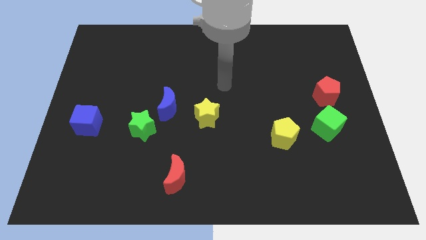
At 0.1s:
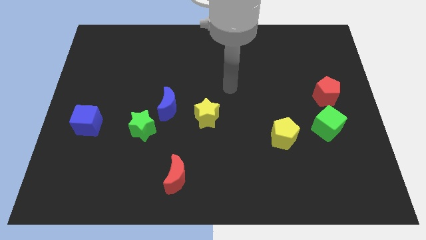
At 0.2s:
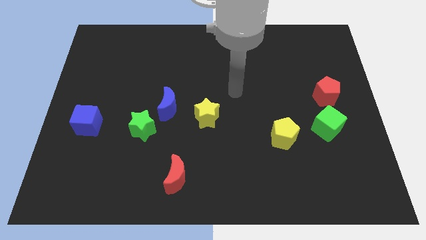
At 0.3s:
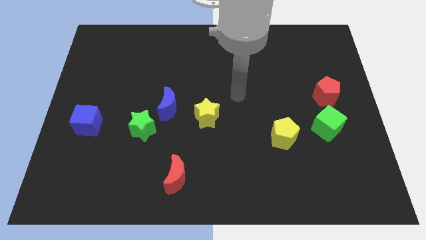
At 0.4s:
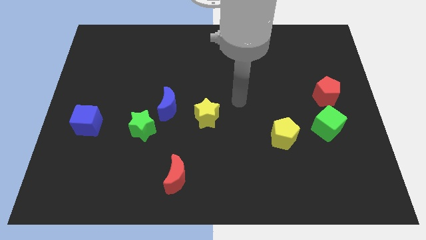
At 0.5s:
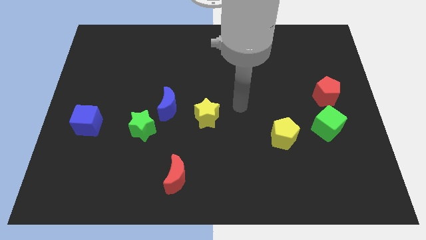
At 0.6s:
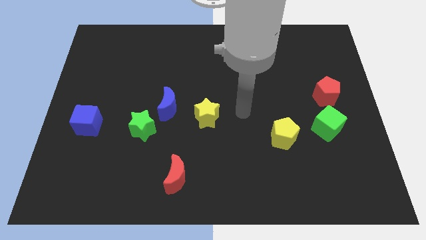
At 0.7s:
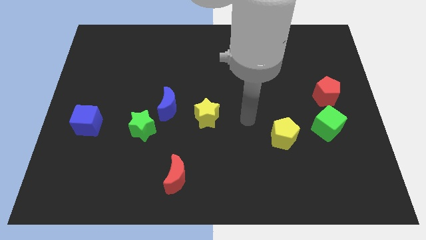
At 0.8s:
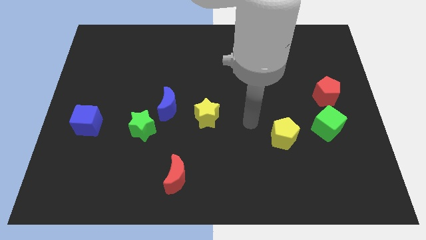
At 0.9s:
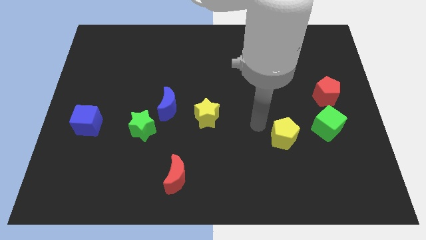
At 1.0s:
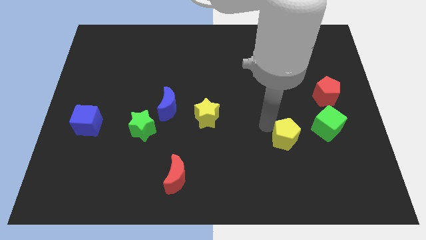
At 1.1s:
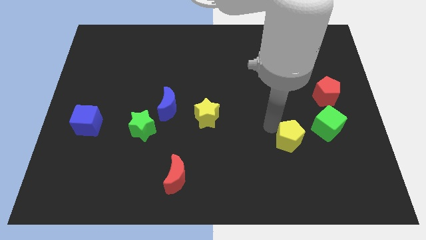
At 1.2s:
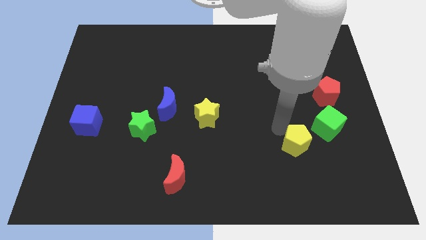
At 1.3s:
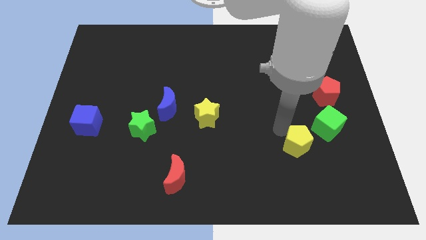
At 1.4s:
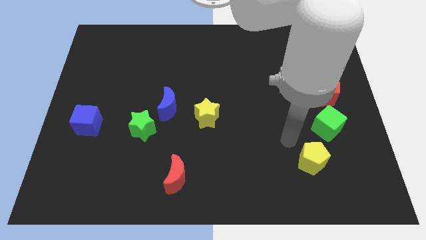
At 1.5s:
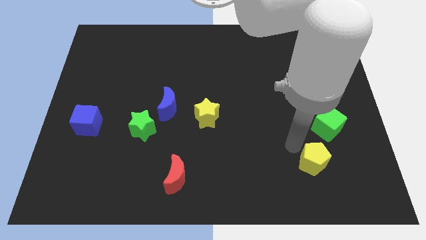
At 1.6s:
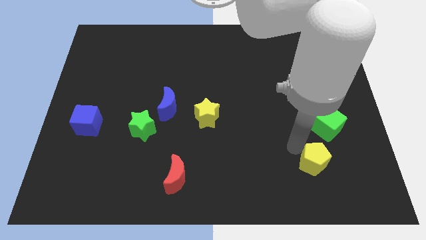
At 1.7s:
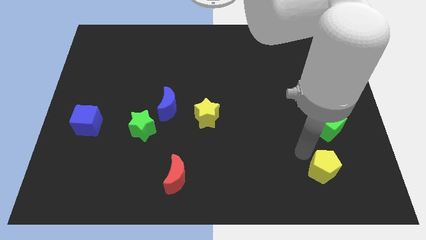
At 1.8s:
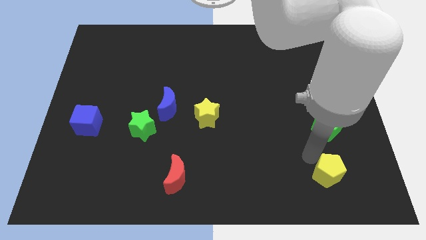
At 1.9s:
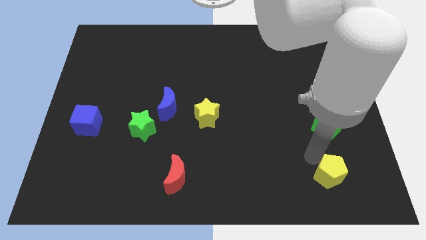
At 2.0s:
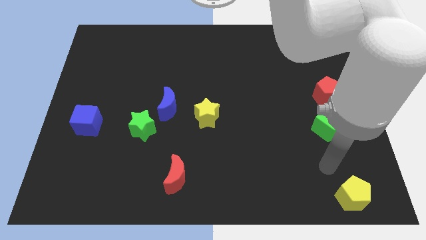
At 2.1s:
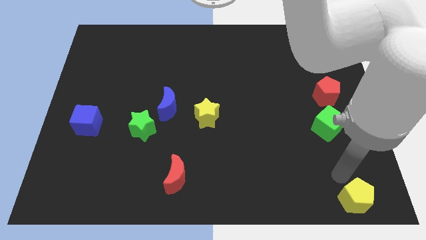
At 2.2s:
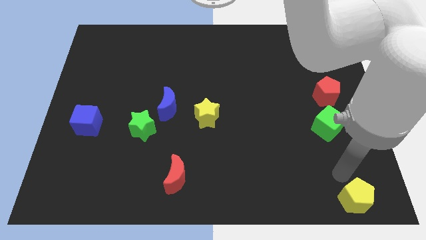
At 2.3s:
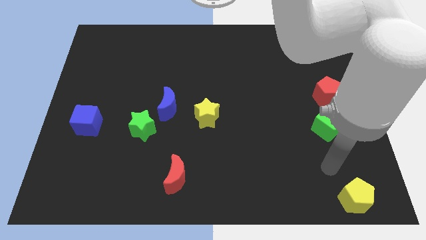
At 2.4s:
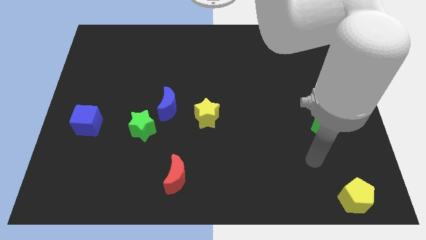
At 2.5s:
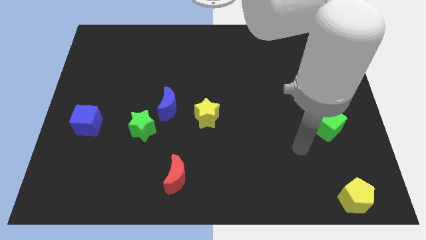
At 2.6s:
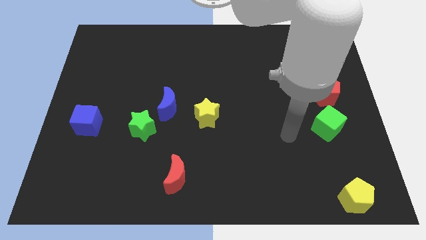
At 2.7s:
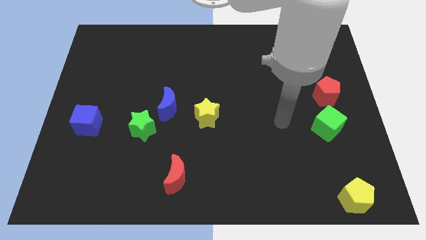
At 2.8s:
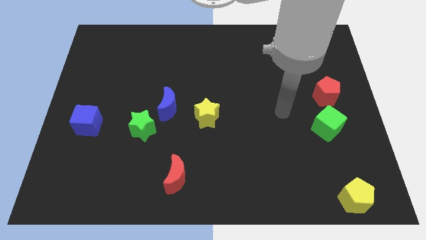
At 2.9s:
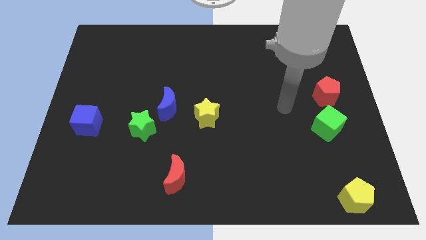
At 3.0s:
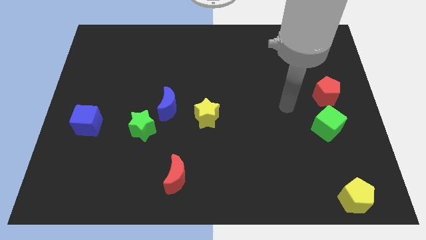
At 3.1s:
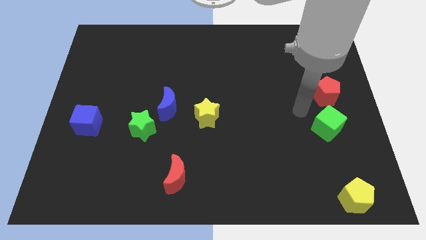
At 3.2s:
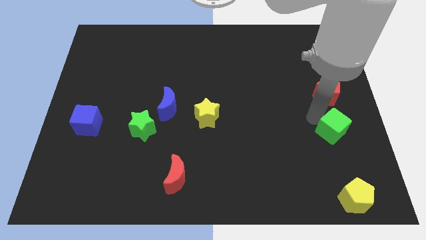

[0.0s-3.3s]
place the yellow pentagon to the bottom right

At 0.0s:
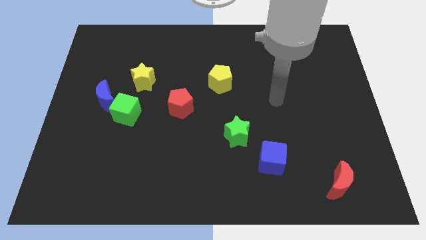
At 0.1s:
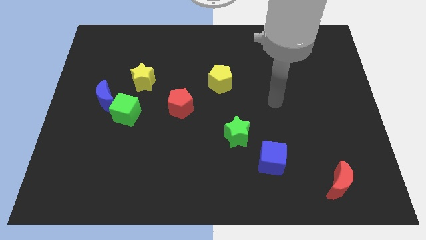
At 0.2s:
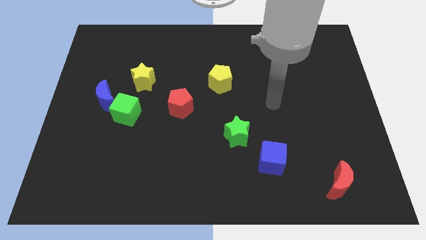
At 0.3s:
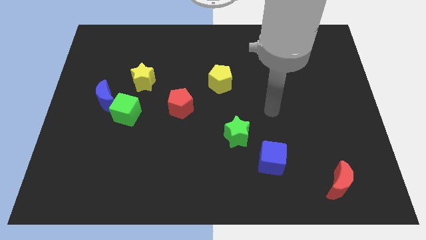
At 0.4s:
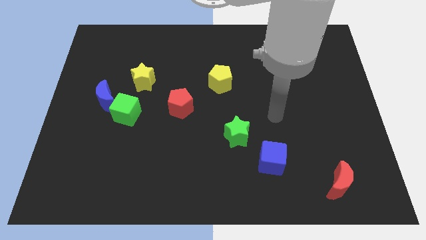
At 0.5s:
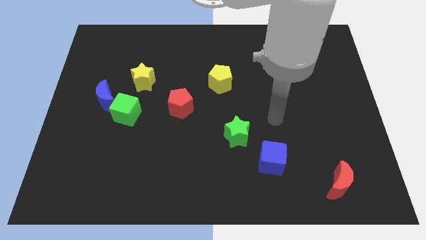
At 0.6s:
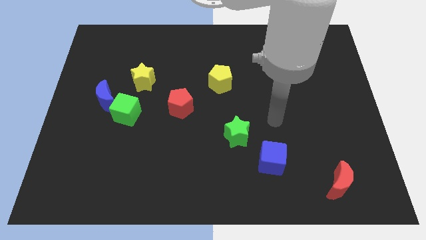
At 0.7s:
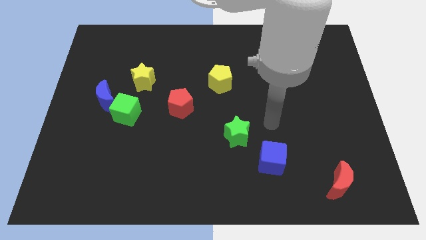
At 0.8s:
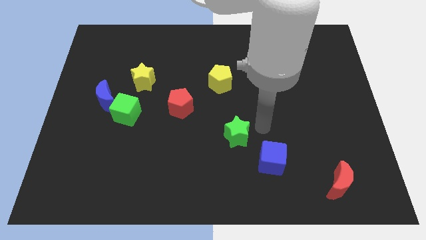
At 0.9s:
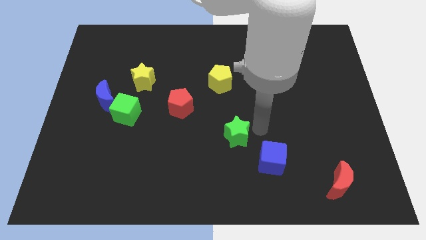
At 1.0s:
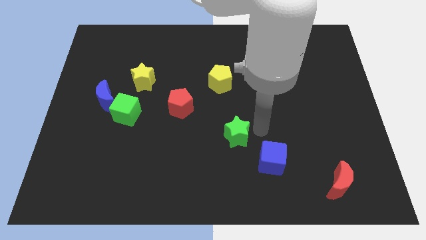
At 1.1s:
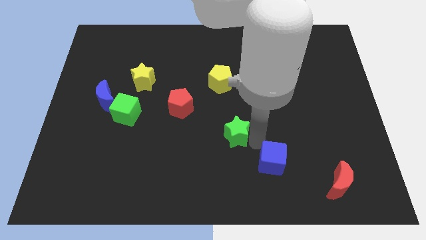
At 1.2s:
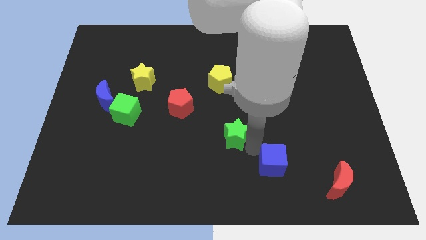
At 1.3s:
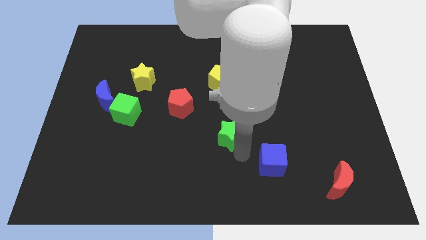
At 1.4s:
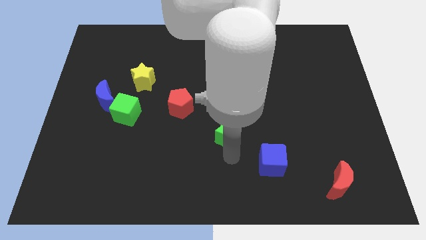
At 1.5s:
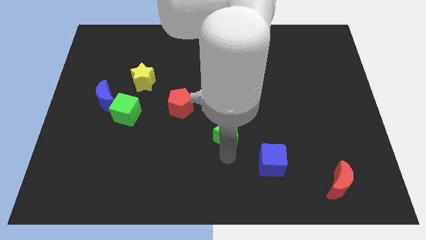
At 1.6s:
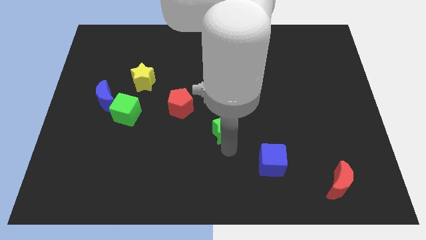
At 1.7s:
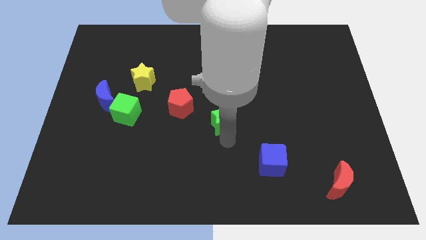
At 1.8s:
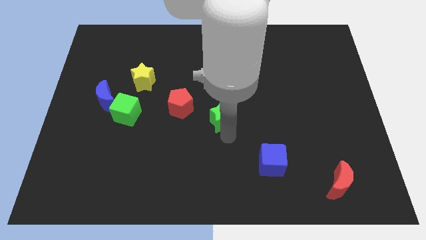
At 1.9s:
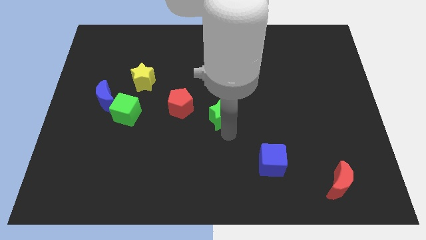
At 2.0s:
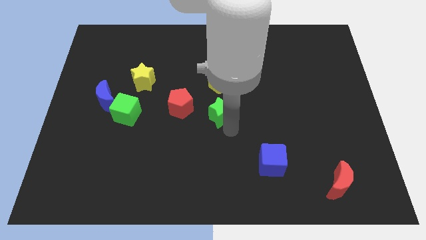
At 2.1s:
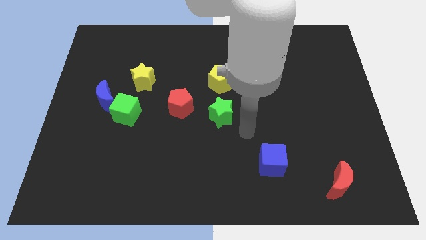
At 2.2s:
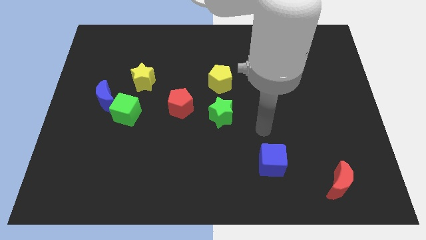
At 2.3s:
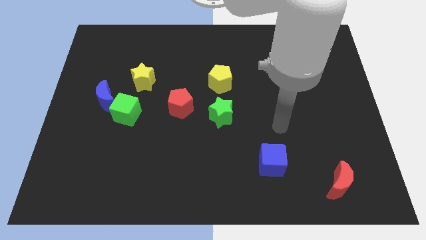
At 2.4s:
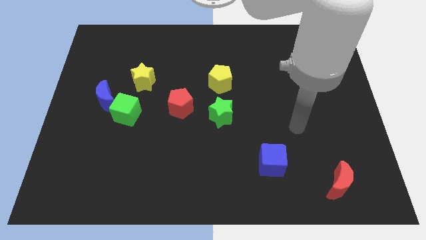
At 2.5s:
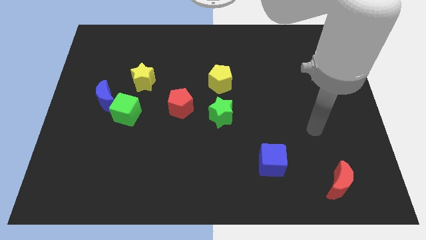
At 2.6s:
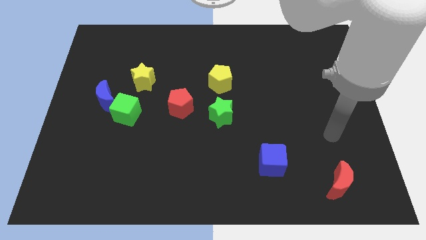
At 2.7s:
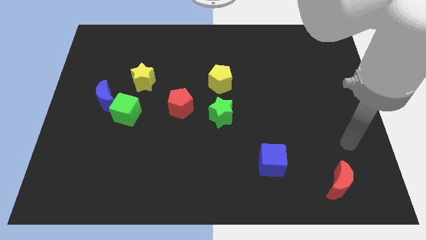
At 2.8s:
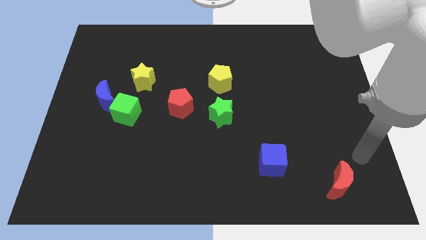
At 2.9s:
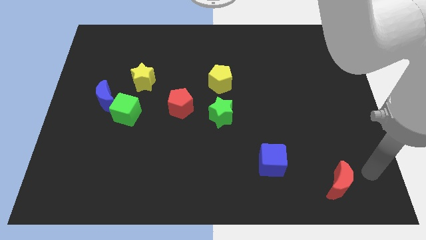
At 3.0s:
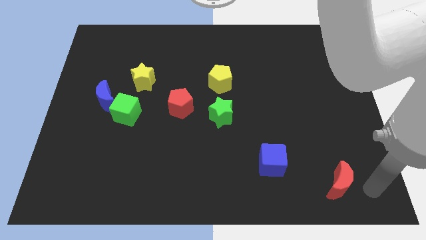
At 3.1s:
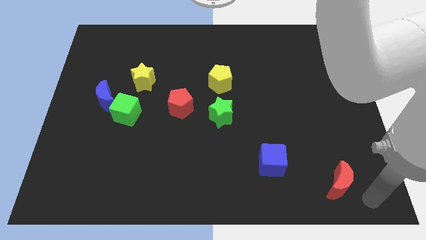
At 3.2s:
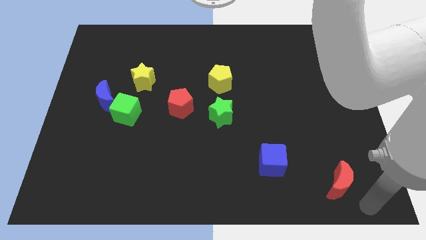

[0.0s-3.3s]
move the green star to the bottom side of the yellow pentagon

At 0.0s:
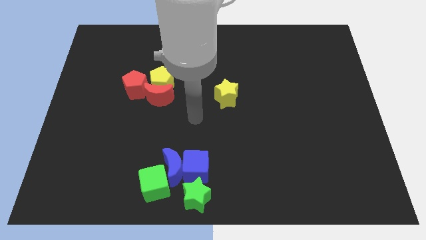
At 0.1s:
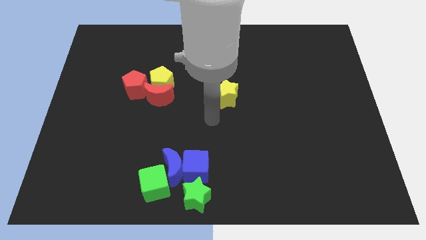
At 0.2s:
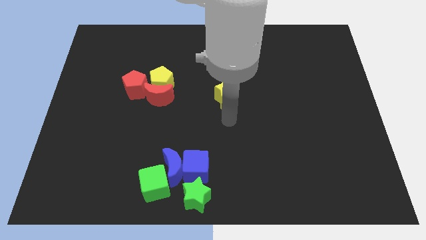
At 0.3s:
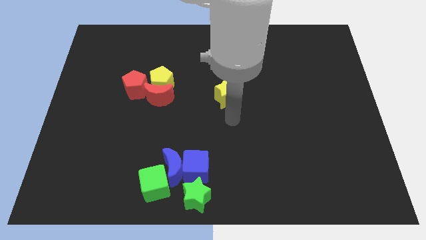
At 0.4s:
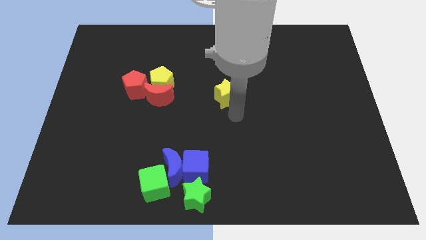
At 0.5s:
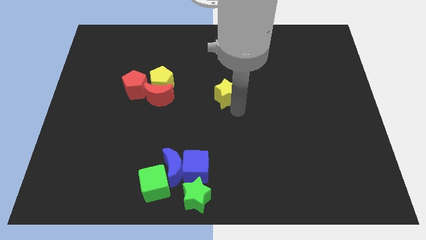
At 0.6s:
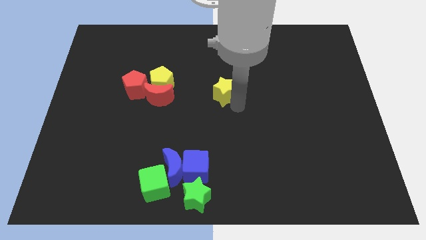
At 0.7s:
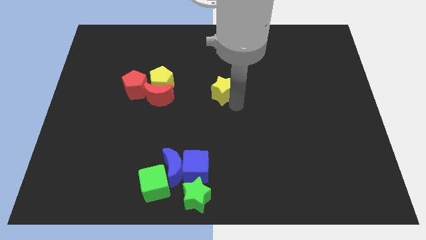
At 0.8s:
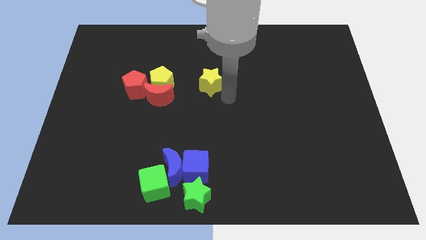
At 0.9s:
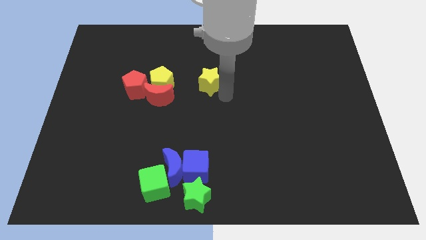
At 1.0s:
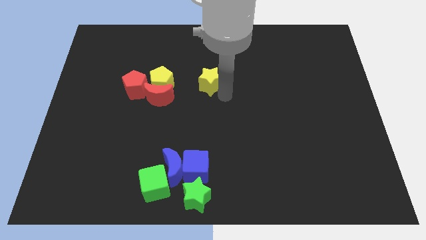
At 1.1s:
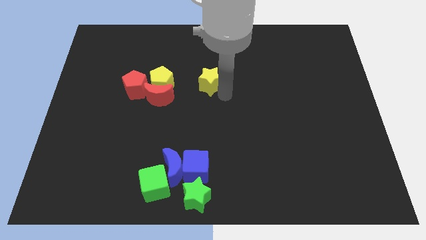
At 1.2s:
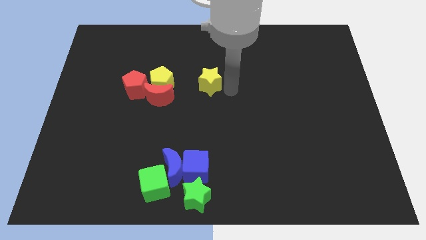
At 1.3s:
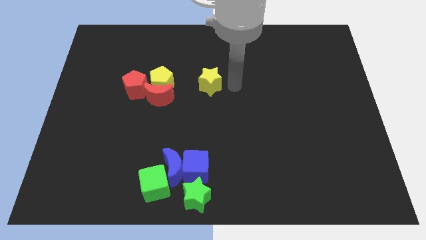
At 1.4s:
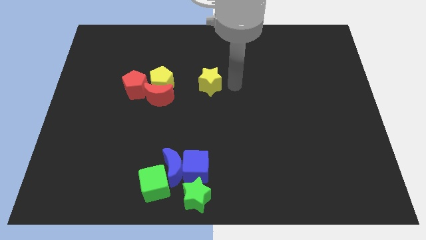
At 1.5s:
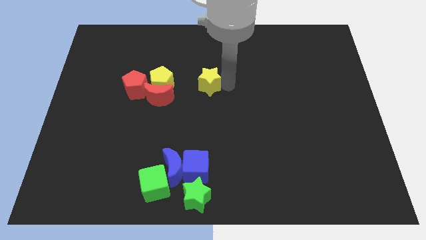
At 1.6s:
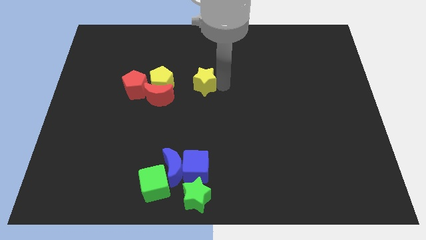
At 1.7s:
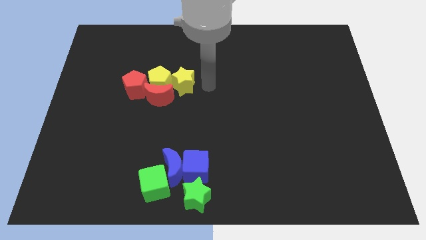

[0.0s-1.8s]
move the yellow star into yellow pentagon

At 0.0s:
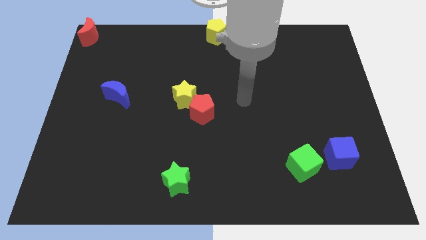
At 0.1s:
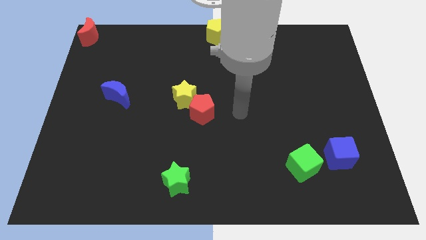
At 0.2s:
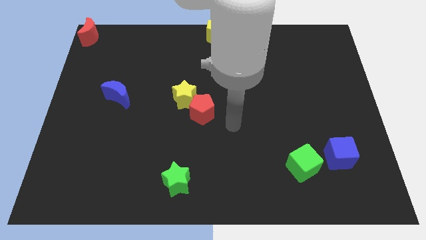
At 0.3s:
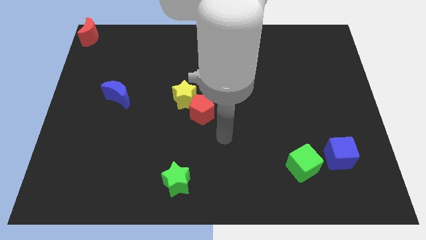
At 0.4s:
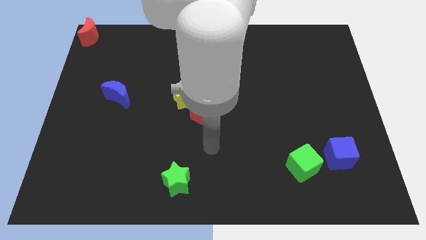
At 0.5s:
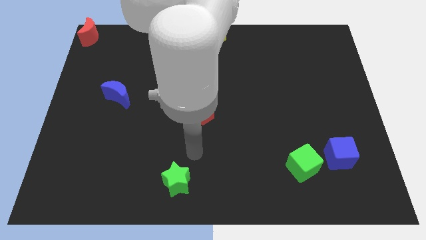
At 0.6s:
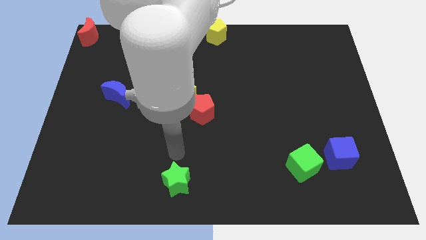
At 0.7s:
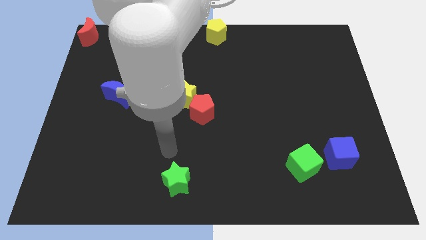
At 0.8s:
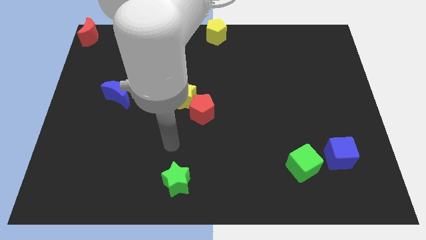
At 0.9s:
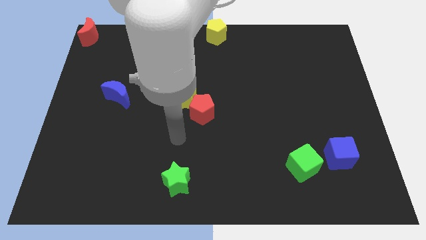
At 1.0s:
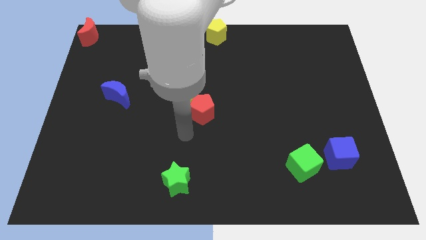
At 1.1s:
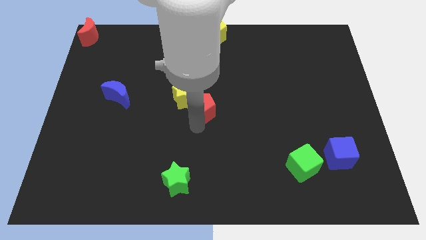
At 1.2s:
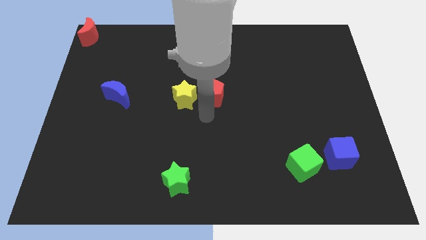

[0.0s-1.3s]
put the red pentagon at the center of the board
